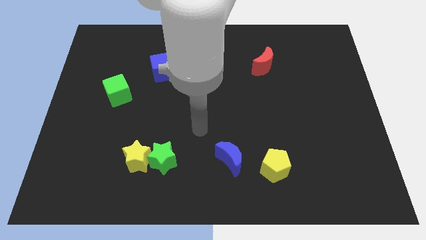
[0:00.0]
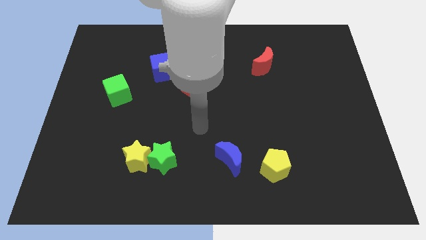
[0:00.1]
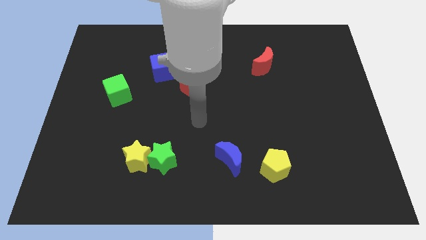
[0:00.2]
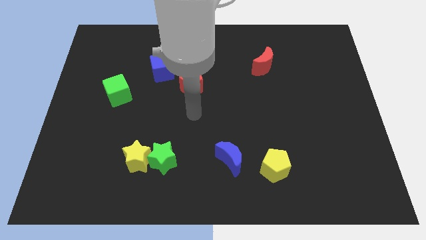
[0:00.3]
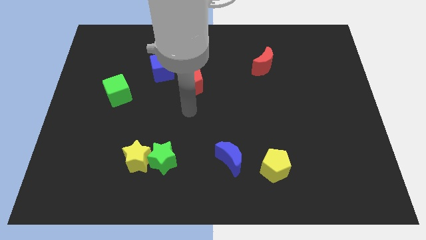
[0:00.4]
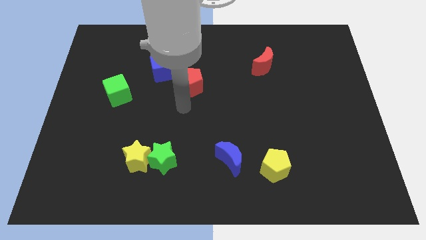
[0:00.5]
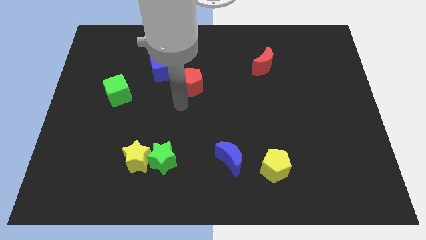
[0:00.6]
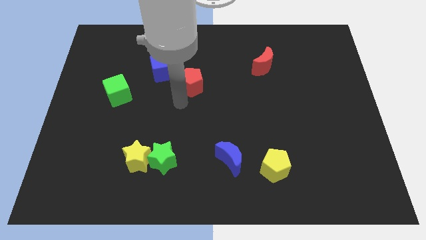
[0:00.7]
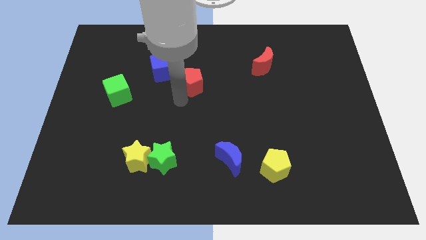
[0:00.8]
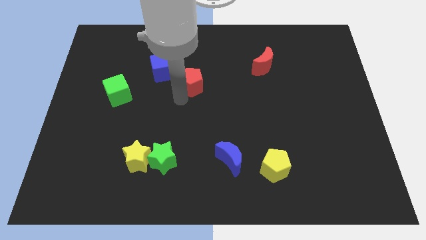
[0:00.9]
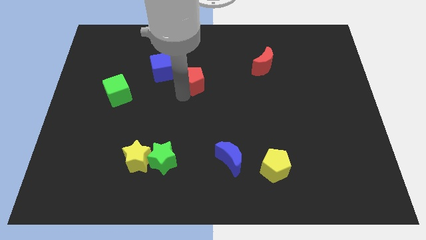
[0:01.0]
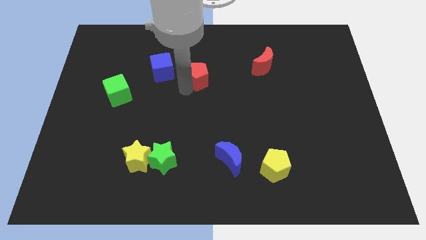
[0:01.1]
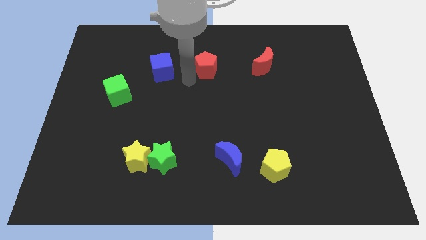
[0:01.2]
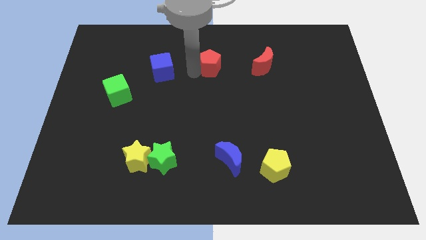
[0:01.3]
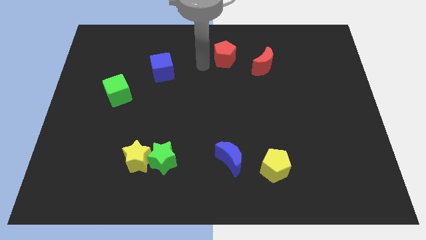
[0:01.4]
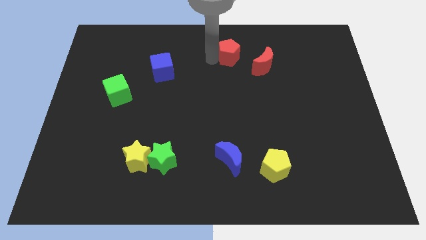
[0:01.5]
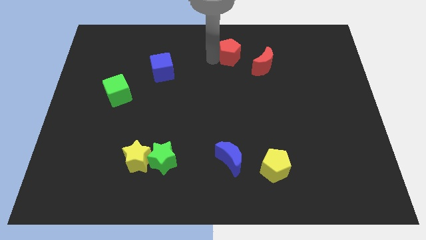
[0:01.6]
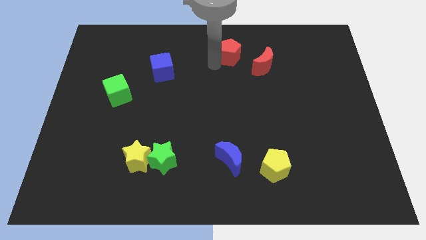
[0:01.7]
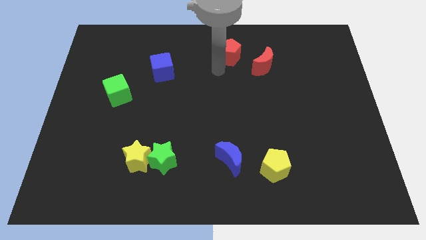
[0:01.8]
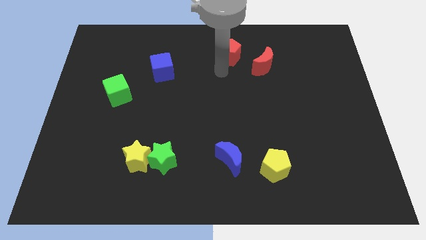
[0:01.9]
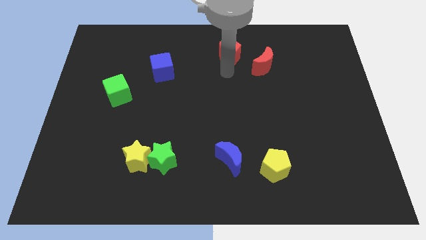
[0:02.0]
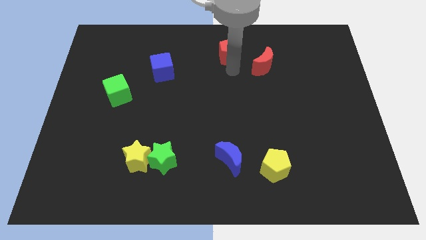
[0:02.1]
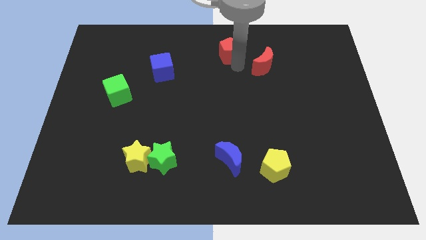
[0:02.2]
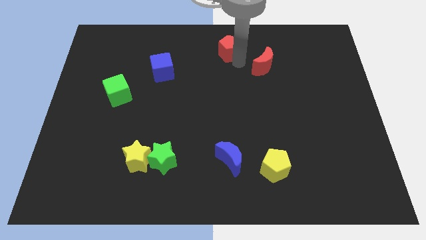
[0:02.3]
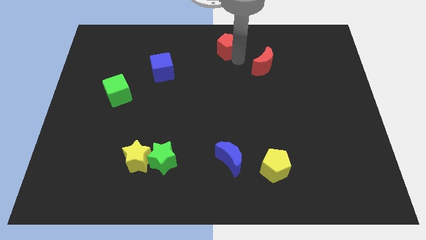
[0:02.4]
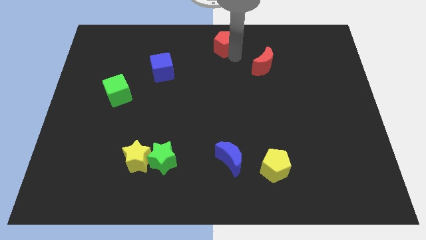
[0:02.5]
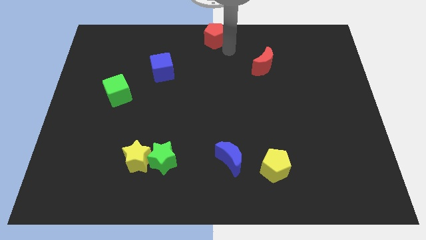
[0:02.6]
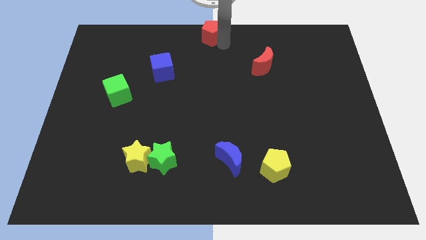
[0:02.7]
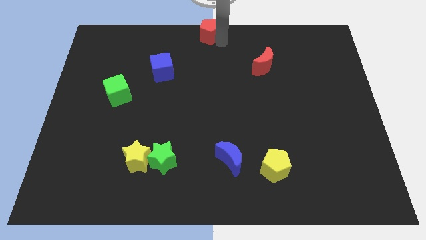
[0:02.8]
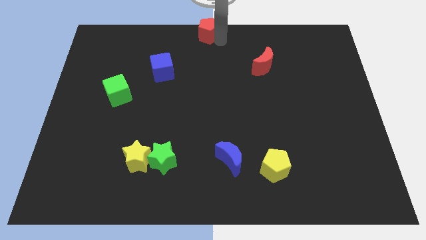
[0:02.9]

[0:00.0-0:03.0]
push the red pentagon to the center top

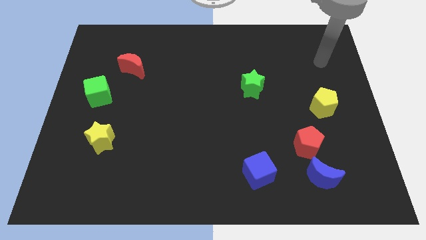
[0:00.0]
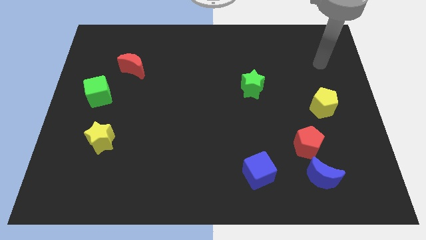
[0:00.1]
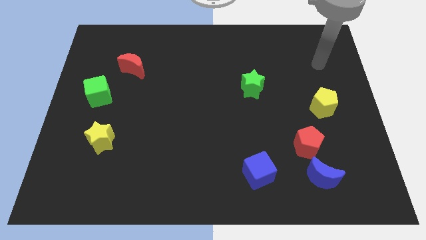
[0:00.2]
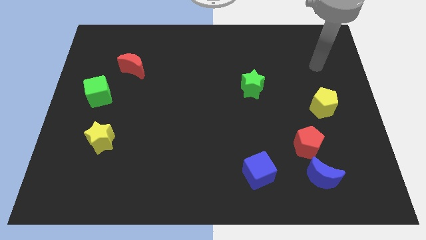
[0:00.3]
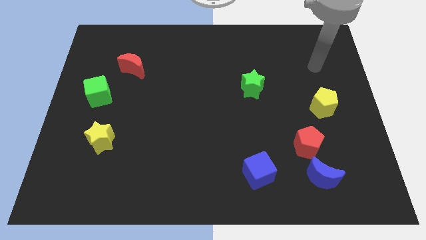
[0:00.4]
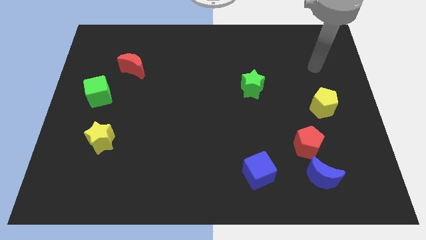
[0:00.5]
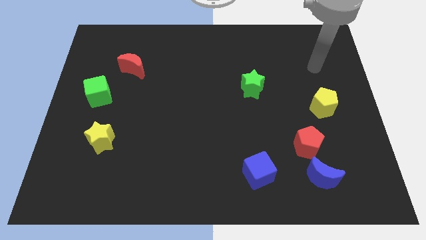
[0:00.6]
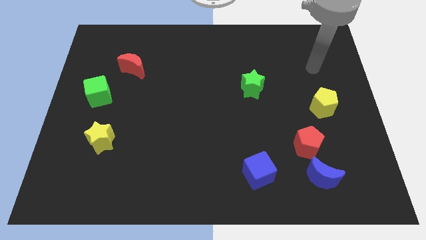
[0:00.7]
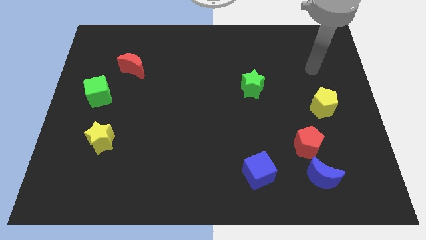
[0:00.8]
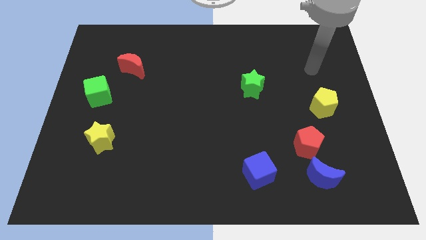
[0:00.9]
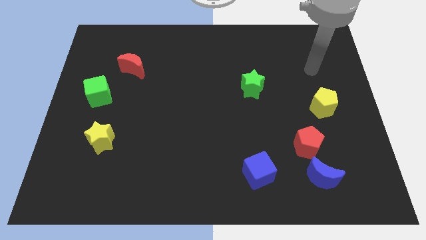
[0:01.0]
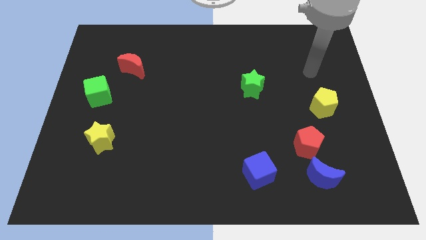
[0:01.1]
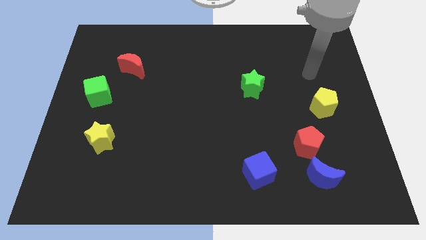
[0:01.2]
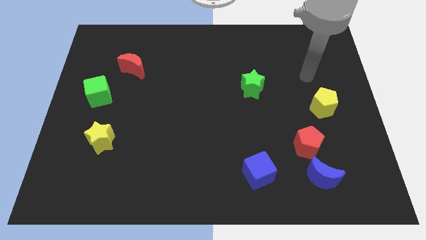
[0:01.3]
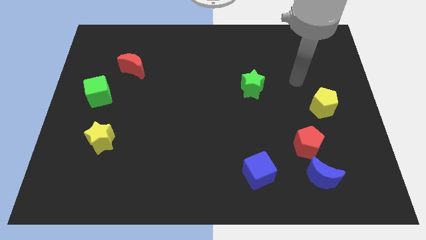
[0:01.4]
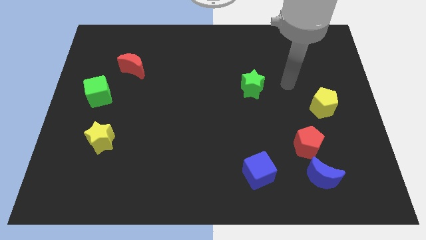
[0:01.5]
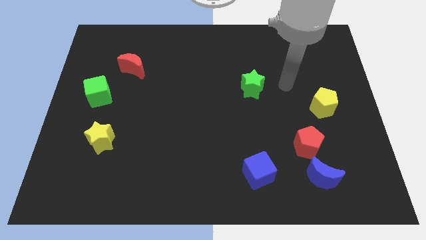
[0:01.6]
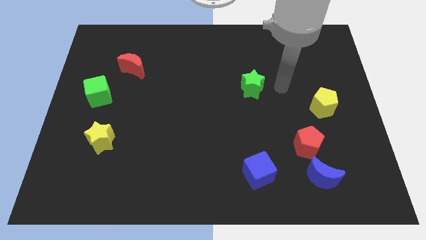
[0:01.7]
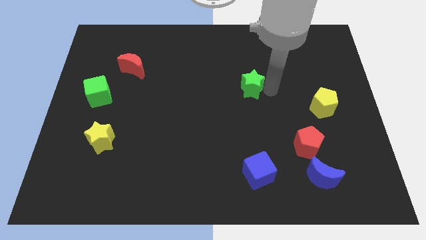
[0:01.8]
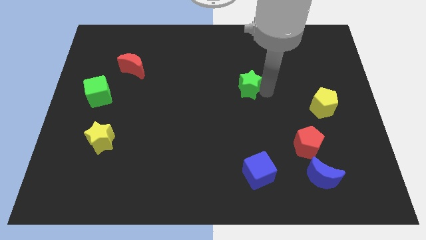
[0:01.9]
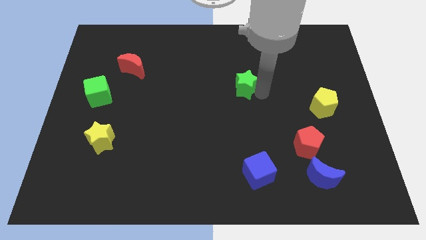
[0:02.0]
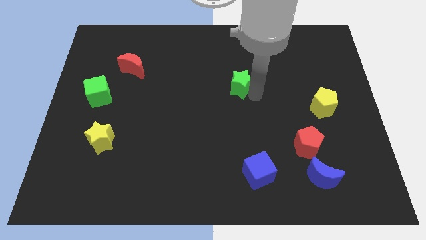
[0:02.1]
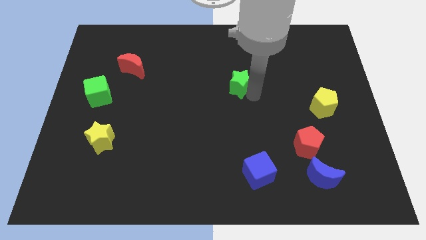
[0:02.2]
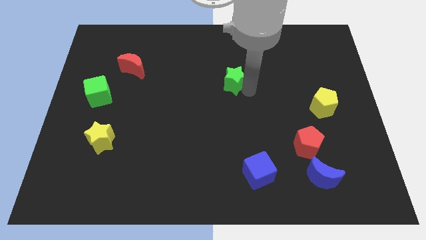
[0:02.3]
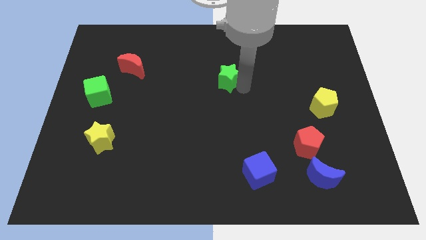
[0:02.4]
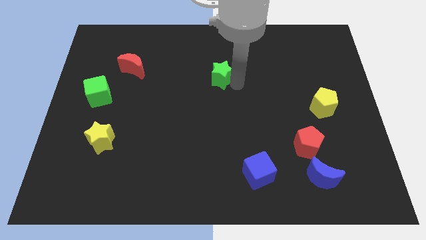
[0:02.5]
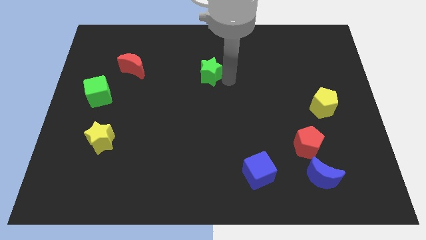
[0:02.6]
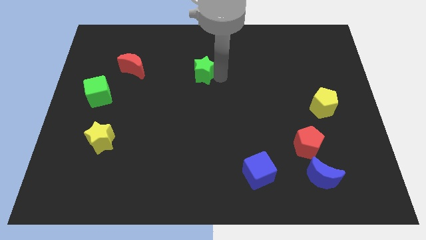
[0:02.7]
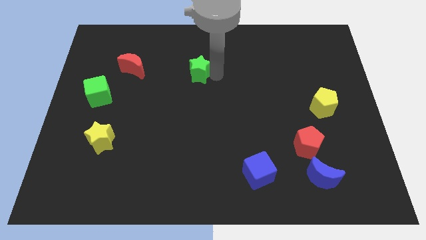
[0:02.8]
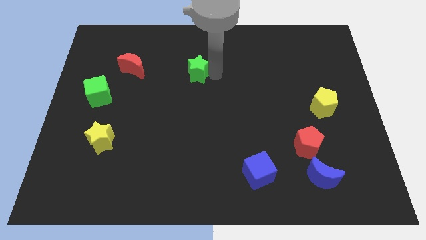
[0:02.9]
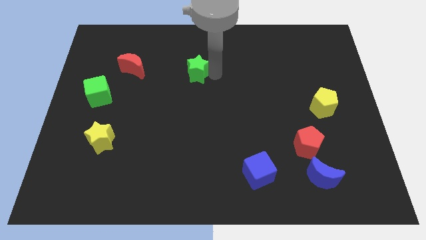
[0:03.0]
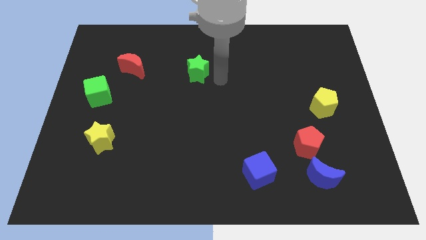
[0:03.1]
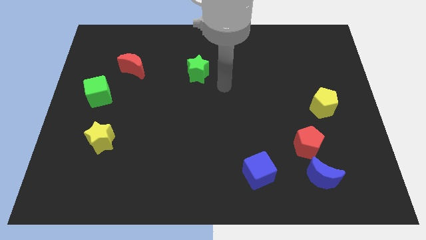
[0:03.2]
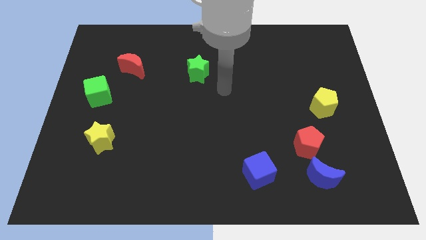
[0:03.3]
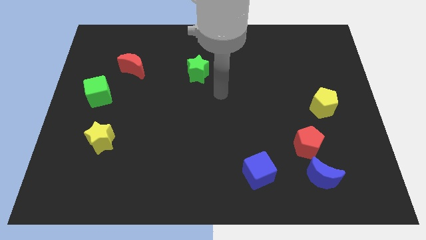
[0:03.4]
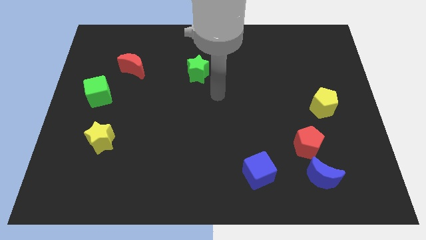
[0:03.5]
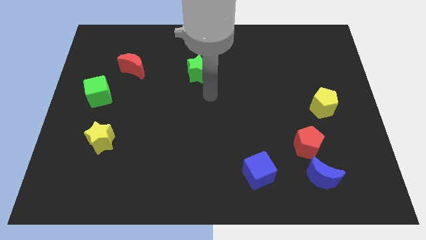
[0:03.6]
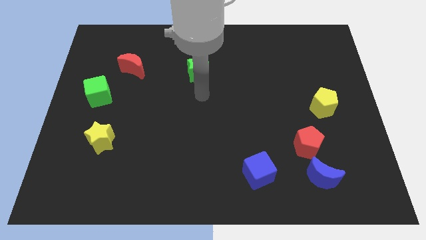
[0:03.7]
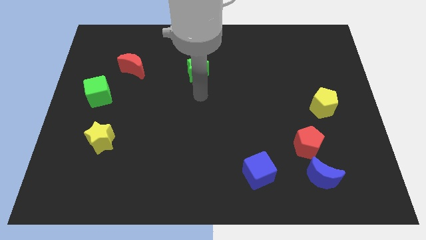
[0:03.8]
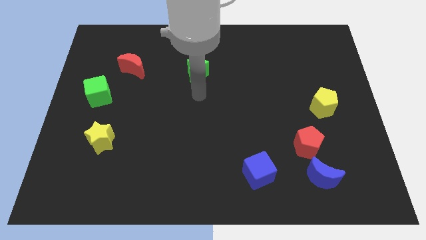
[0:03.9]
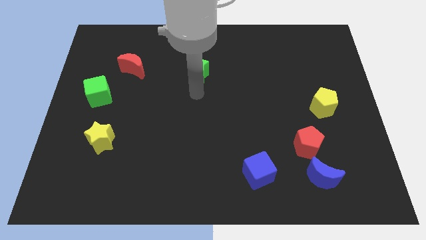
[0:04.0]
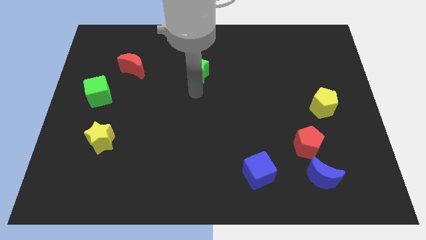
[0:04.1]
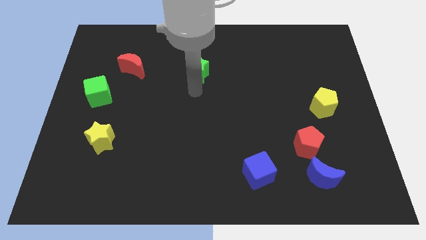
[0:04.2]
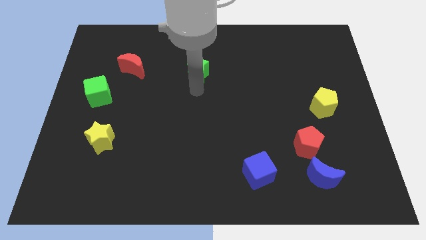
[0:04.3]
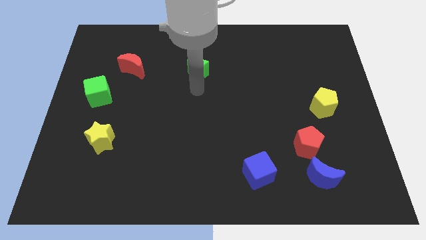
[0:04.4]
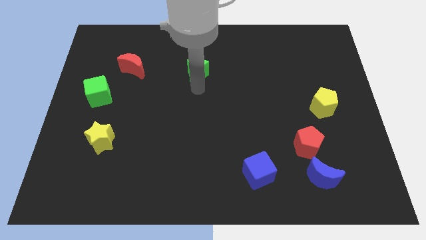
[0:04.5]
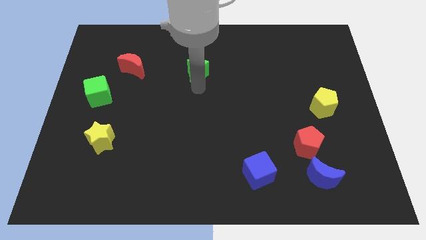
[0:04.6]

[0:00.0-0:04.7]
move the green star towards the top center of the board

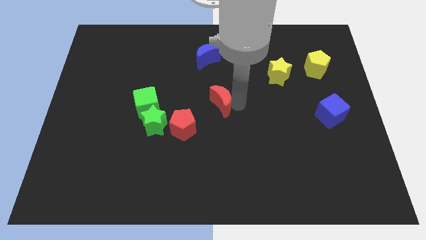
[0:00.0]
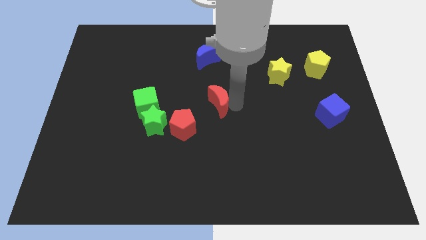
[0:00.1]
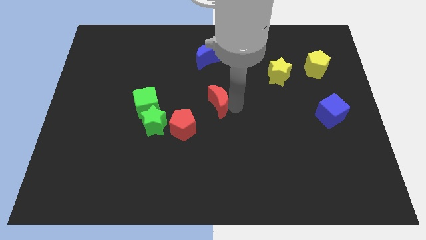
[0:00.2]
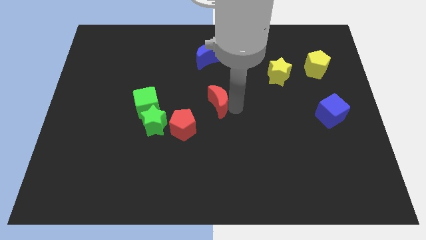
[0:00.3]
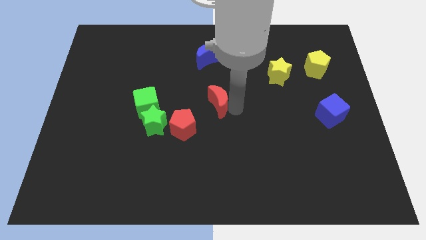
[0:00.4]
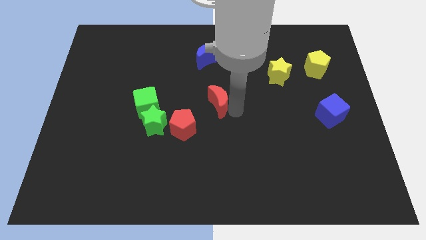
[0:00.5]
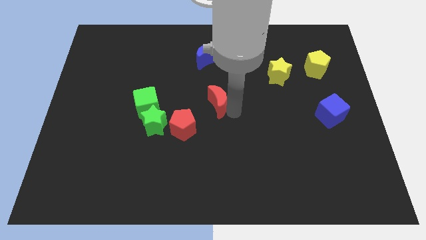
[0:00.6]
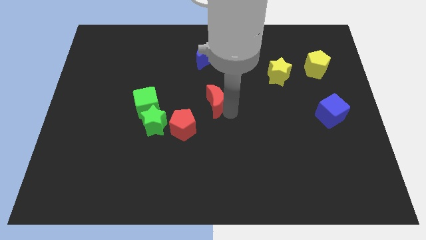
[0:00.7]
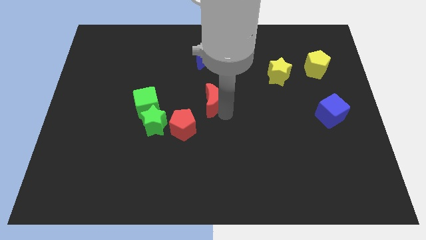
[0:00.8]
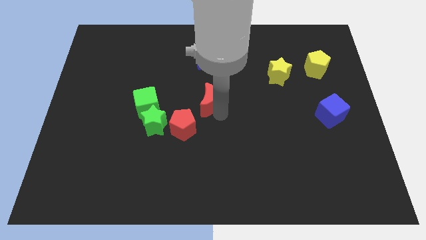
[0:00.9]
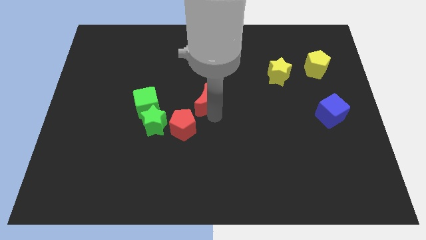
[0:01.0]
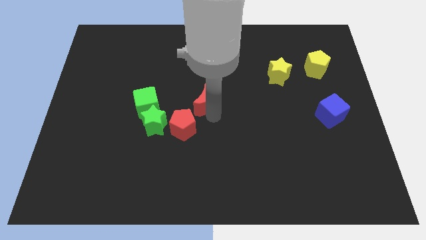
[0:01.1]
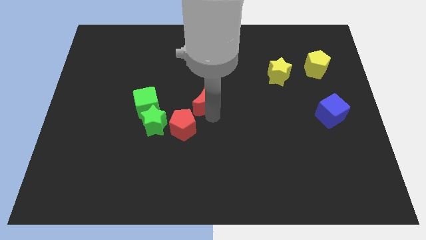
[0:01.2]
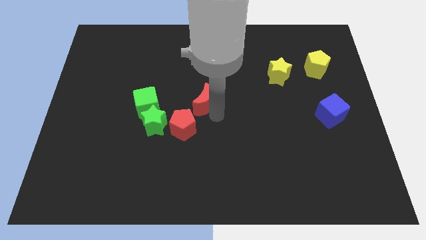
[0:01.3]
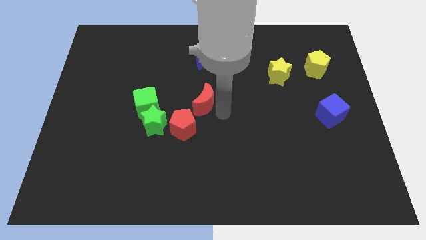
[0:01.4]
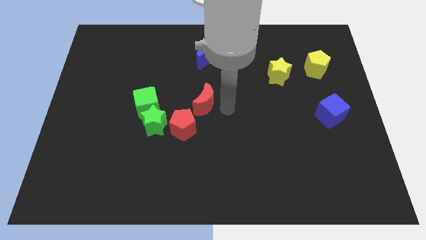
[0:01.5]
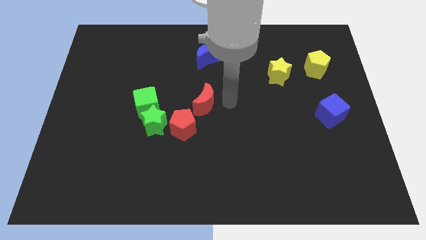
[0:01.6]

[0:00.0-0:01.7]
move the red moon towards the red pentagon
